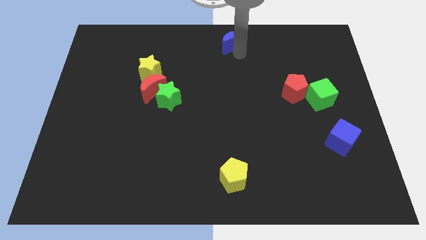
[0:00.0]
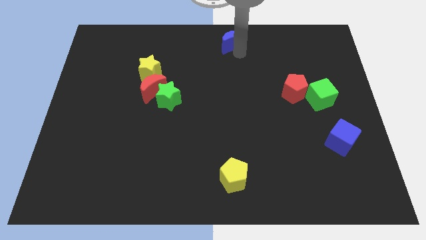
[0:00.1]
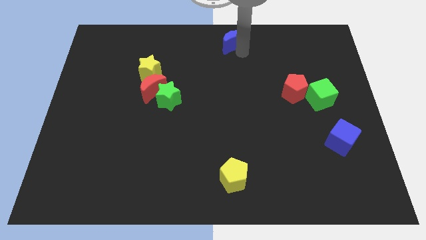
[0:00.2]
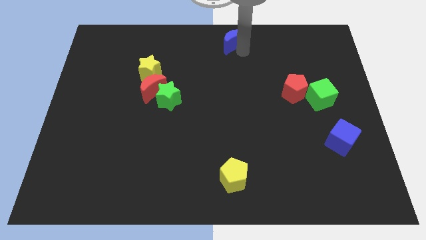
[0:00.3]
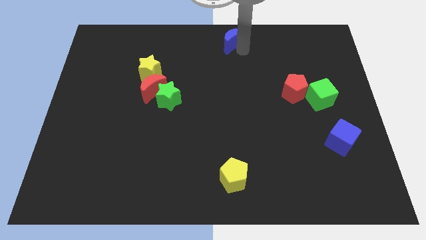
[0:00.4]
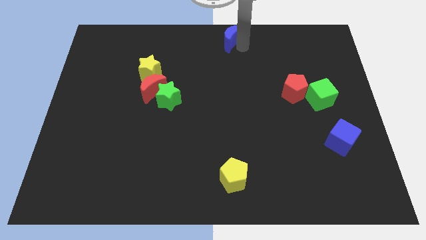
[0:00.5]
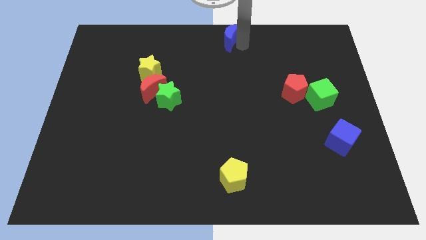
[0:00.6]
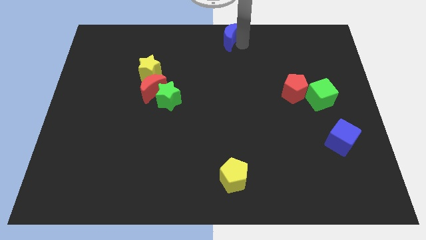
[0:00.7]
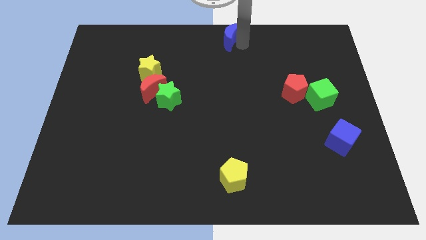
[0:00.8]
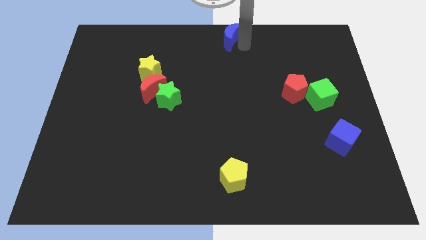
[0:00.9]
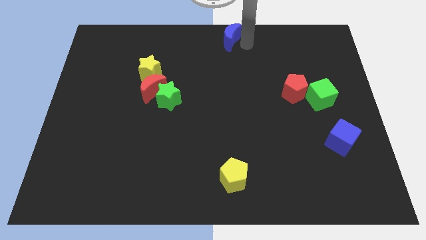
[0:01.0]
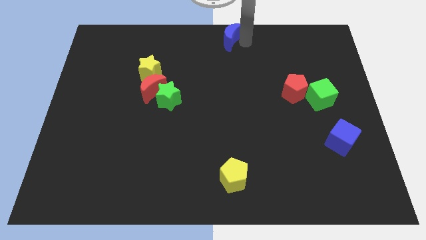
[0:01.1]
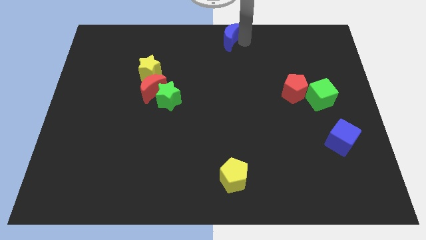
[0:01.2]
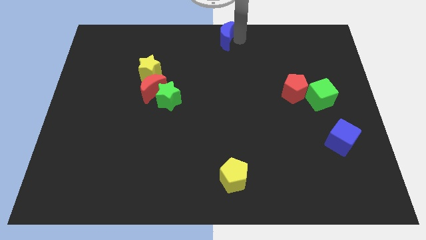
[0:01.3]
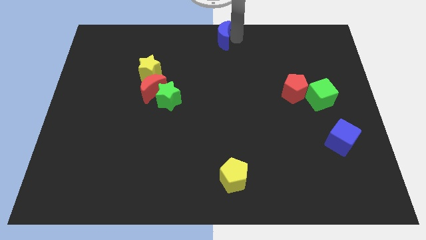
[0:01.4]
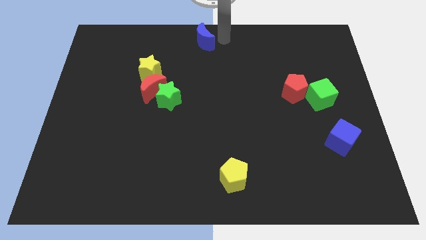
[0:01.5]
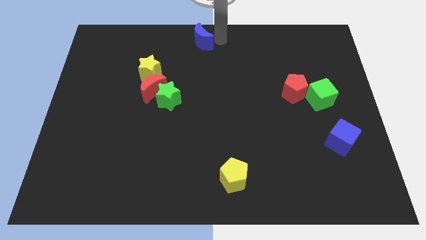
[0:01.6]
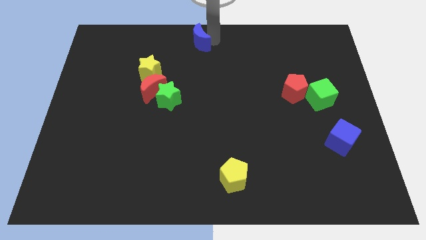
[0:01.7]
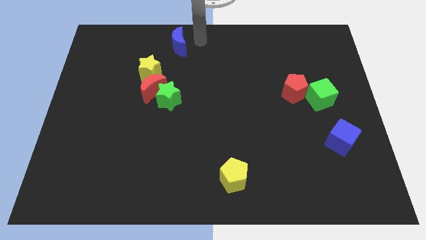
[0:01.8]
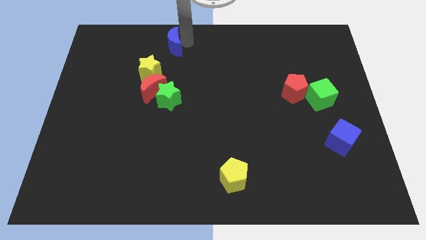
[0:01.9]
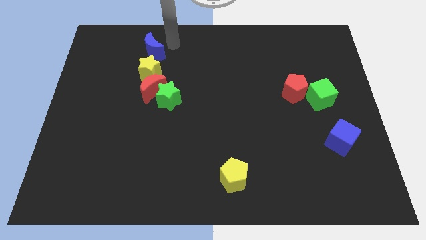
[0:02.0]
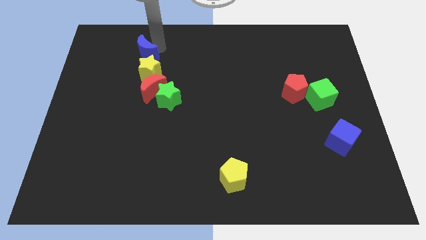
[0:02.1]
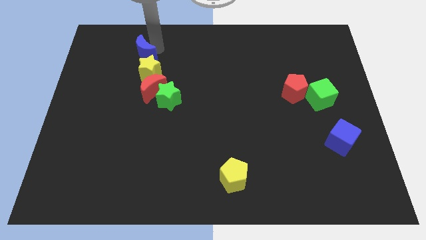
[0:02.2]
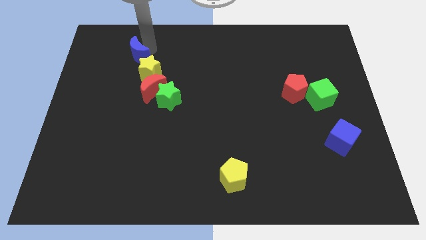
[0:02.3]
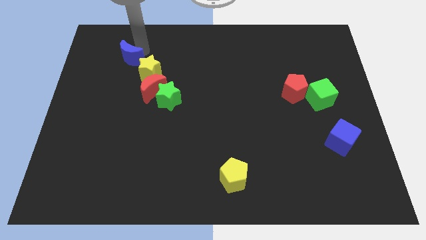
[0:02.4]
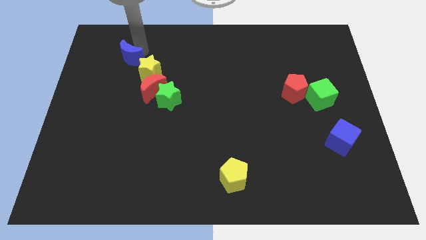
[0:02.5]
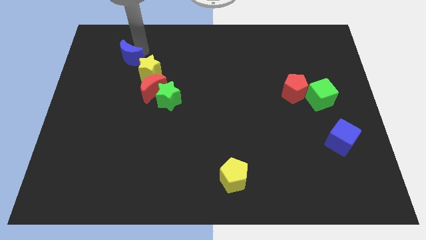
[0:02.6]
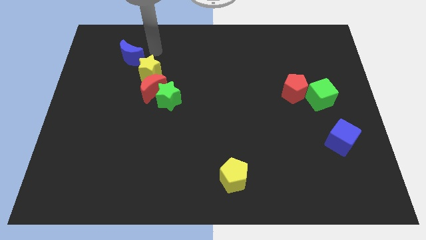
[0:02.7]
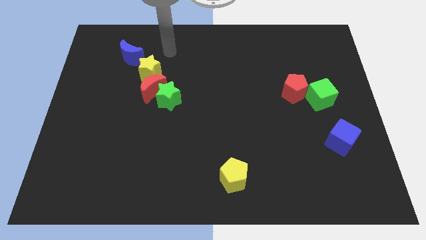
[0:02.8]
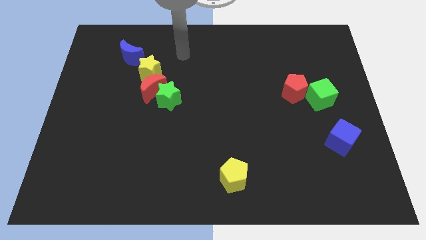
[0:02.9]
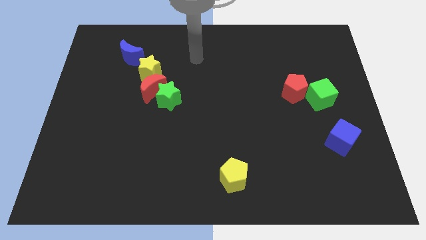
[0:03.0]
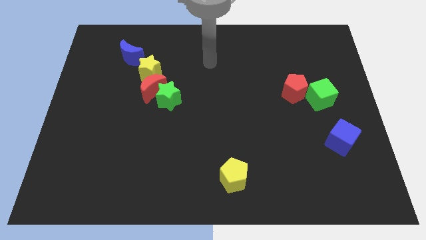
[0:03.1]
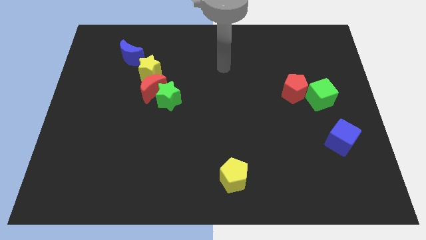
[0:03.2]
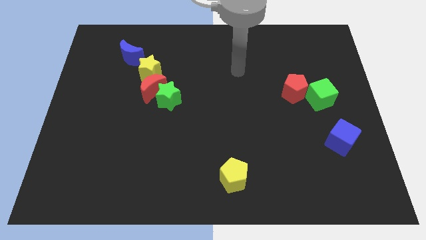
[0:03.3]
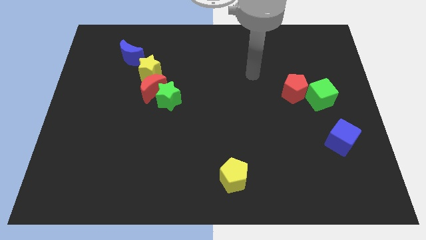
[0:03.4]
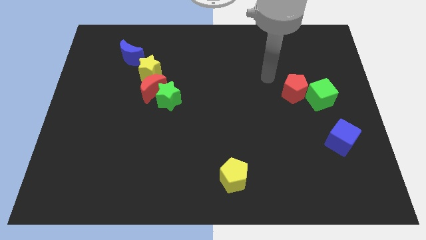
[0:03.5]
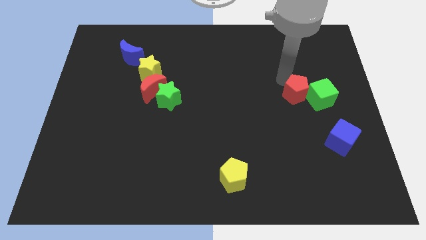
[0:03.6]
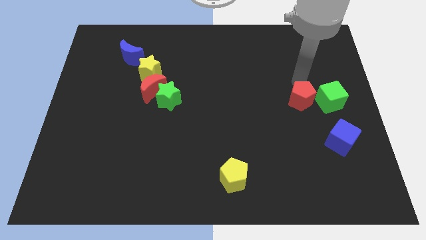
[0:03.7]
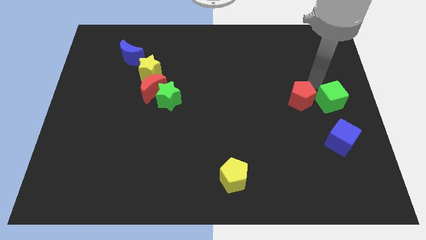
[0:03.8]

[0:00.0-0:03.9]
place the blue moon diagonal to the yellow star

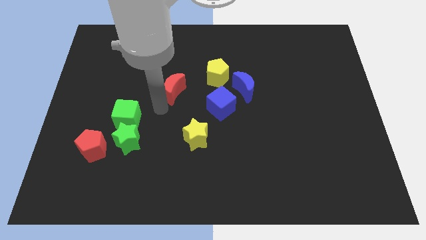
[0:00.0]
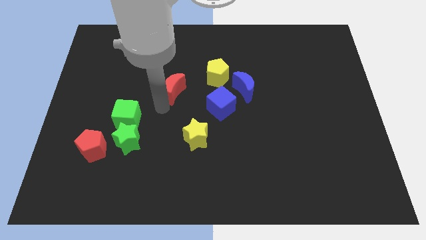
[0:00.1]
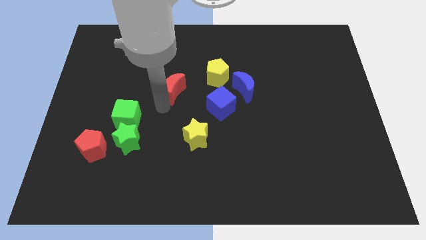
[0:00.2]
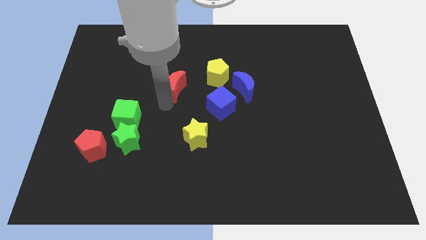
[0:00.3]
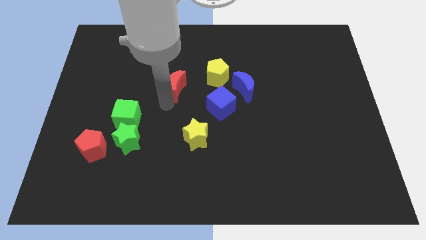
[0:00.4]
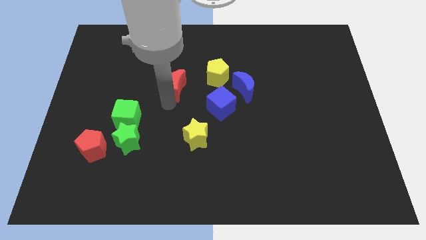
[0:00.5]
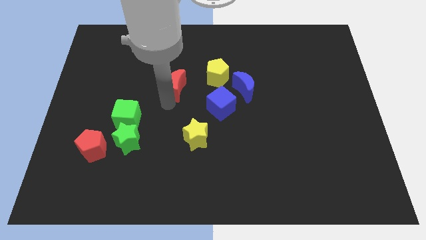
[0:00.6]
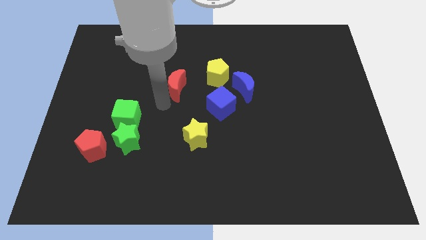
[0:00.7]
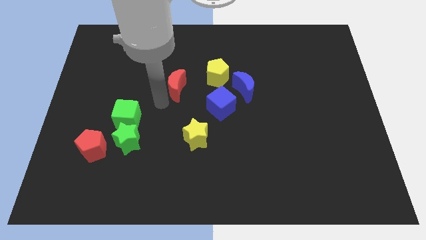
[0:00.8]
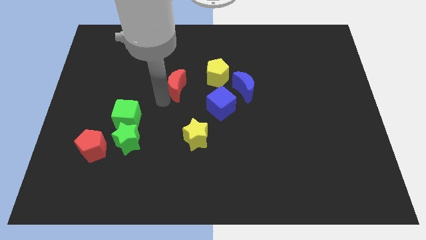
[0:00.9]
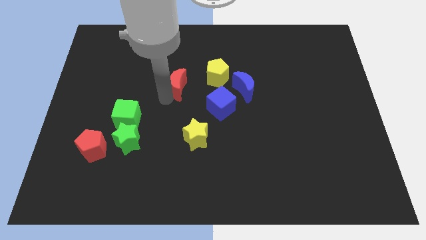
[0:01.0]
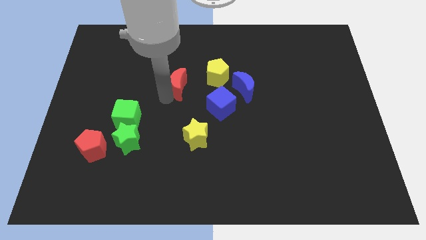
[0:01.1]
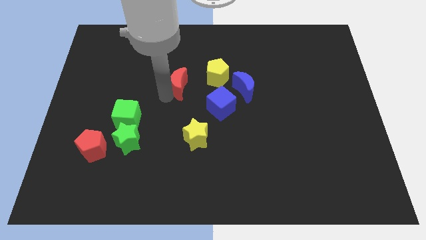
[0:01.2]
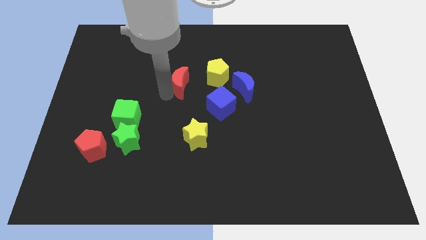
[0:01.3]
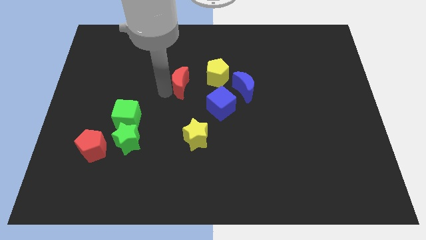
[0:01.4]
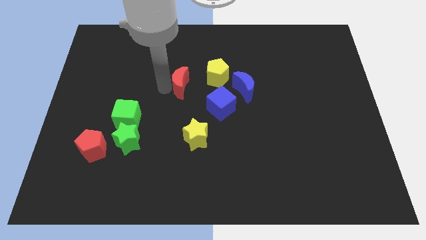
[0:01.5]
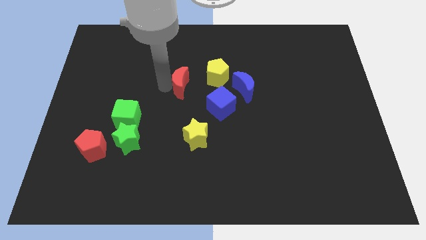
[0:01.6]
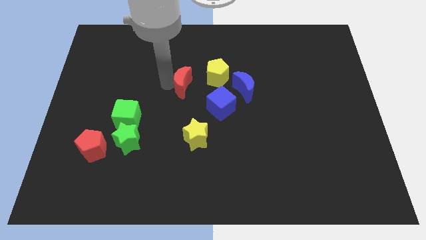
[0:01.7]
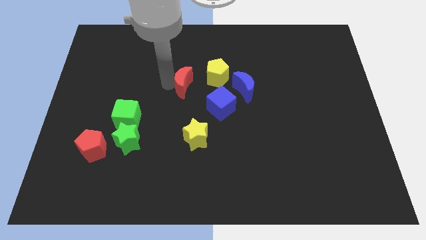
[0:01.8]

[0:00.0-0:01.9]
move the red moon to the left of the yellow pentagon

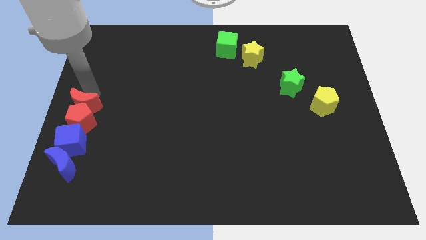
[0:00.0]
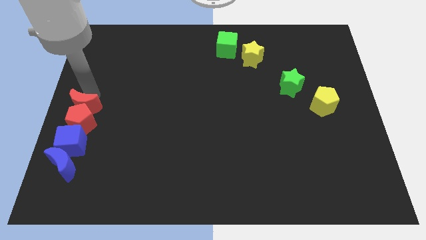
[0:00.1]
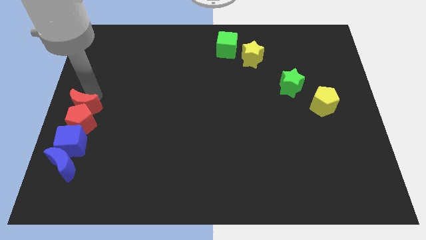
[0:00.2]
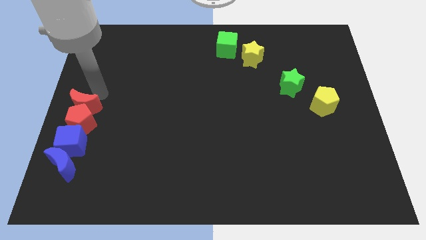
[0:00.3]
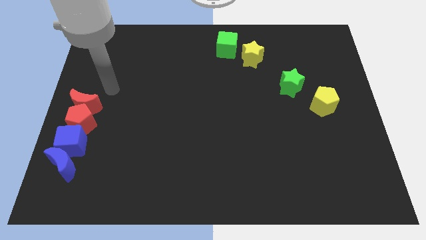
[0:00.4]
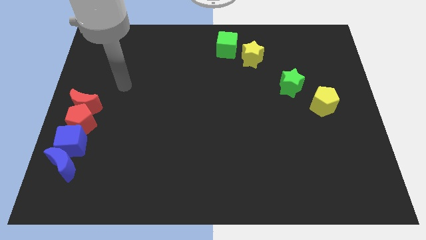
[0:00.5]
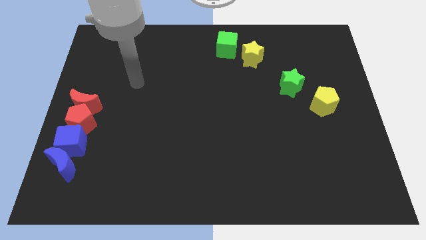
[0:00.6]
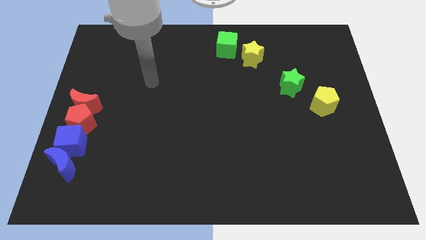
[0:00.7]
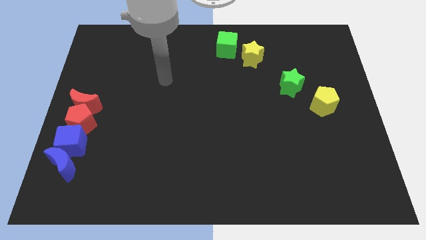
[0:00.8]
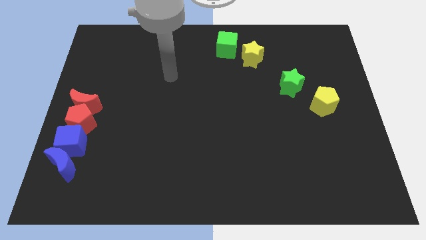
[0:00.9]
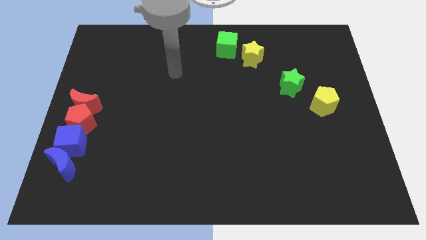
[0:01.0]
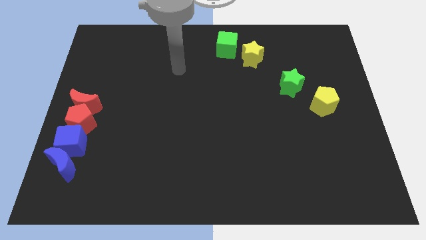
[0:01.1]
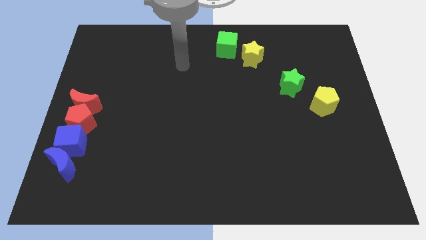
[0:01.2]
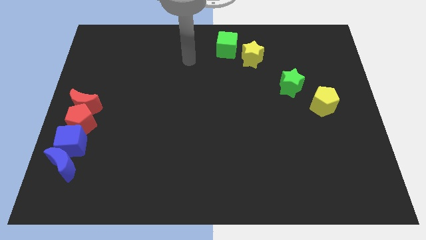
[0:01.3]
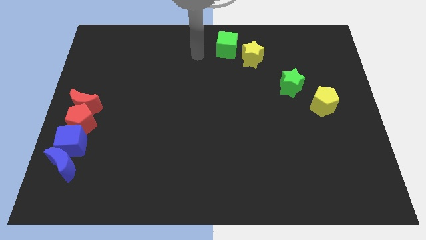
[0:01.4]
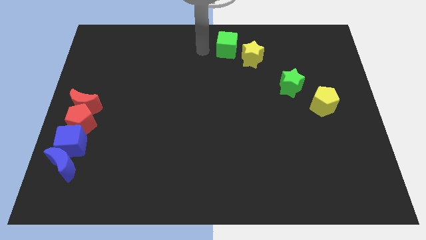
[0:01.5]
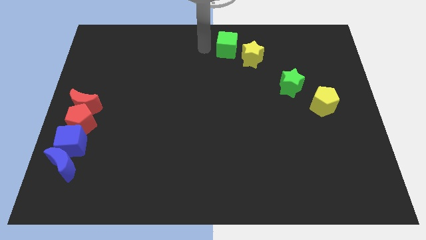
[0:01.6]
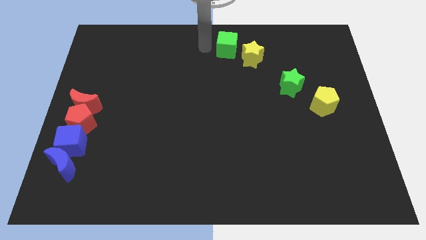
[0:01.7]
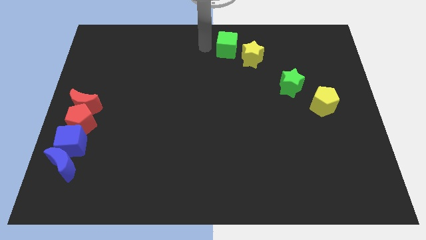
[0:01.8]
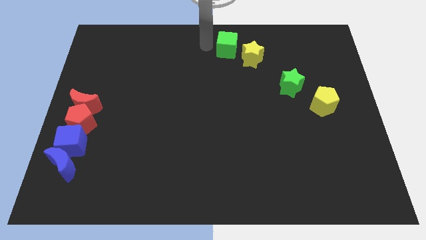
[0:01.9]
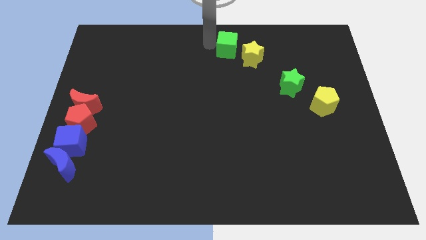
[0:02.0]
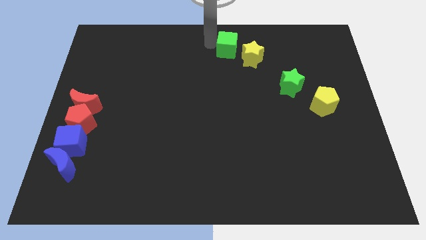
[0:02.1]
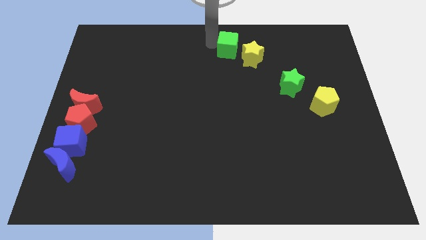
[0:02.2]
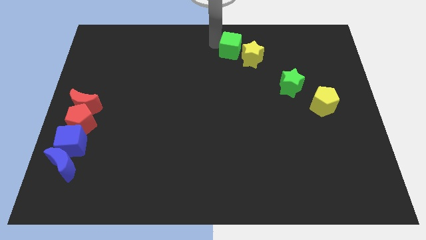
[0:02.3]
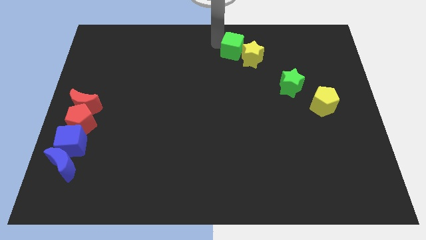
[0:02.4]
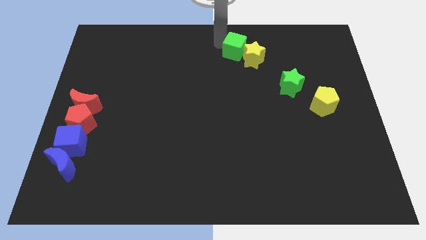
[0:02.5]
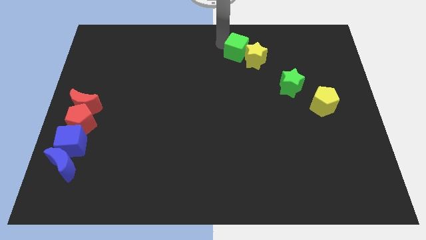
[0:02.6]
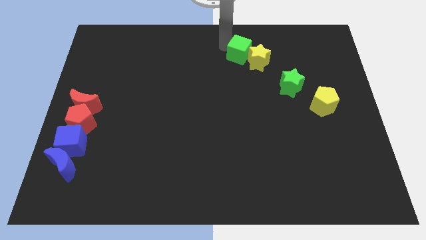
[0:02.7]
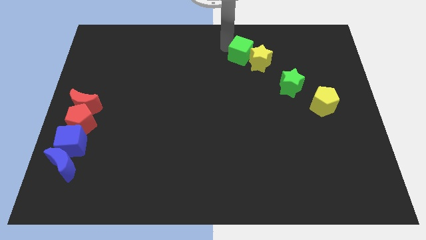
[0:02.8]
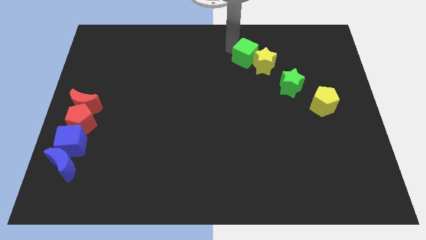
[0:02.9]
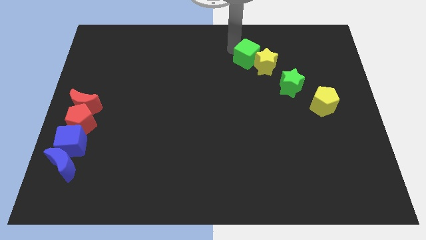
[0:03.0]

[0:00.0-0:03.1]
push the green cube and yellow star towards the top left side of the green star

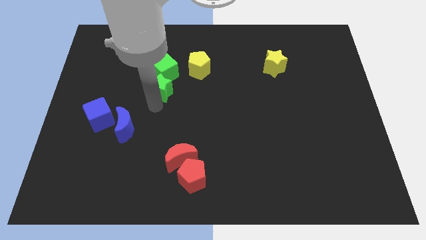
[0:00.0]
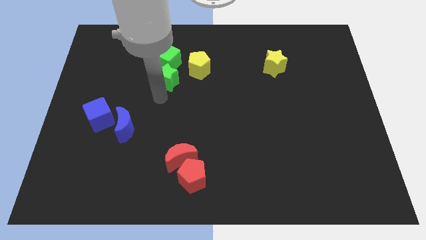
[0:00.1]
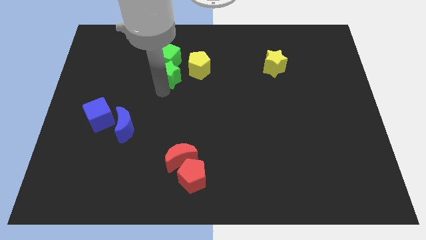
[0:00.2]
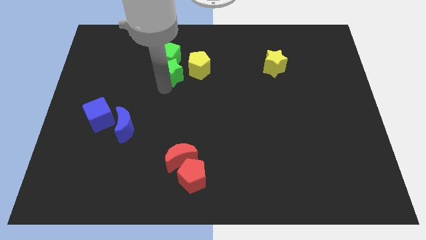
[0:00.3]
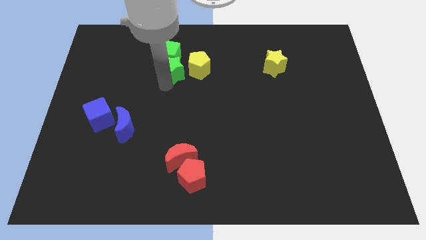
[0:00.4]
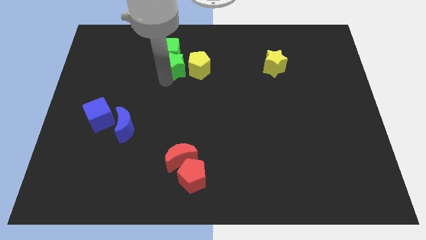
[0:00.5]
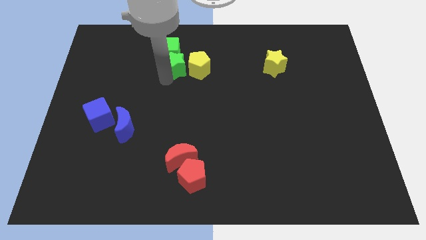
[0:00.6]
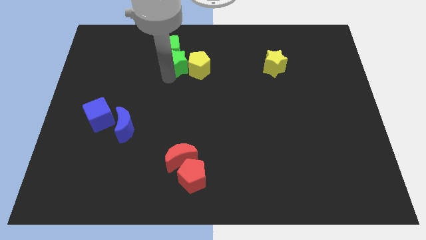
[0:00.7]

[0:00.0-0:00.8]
push the green star into the green cube
